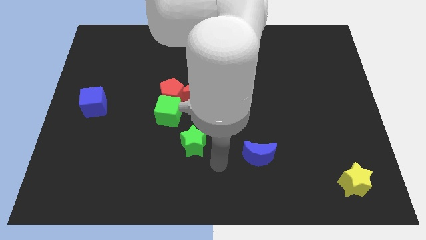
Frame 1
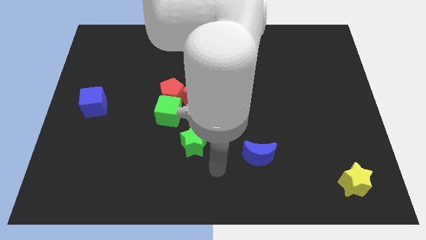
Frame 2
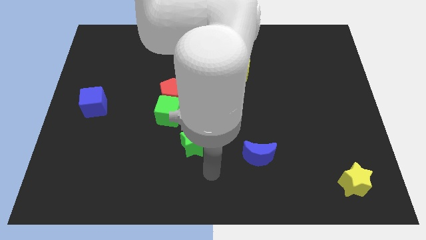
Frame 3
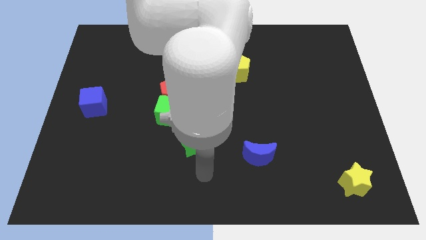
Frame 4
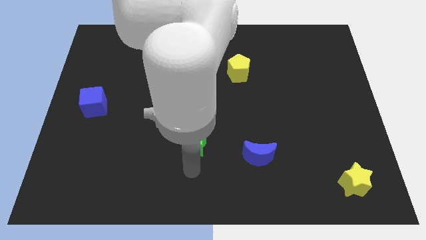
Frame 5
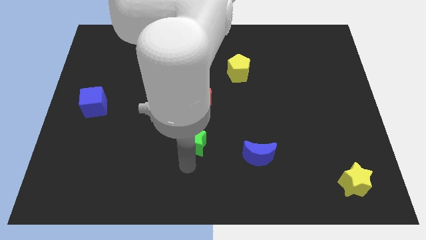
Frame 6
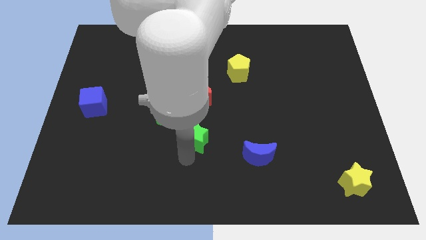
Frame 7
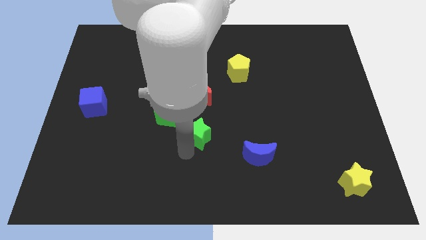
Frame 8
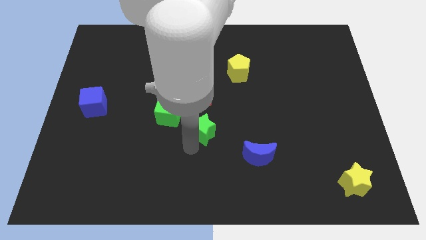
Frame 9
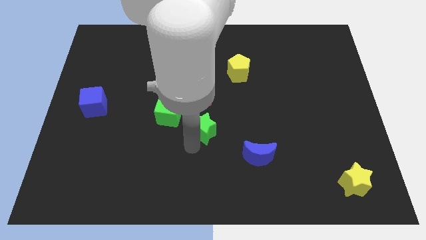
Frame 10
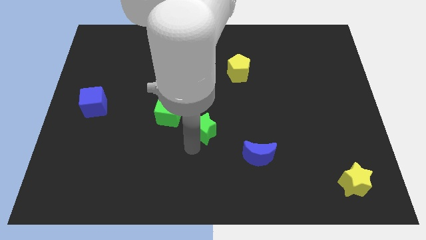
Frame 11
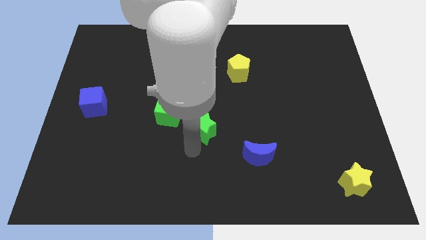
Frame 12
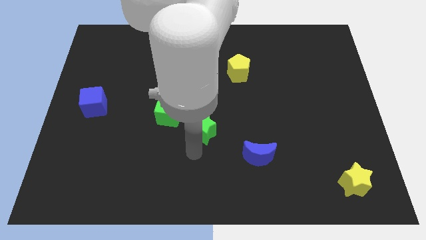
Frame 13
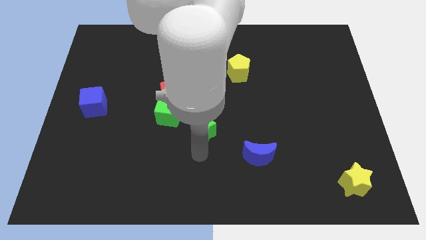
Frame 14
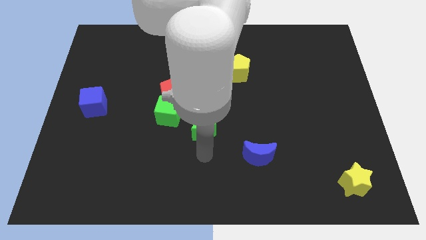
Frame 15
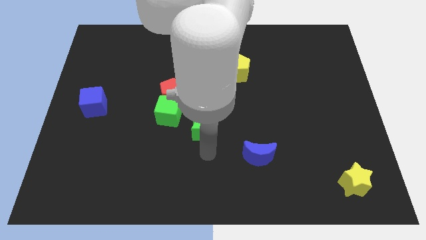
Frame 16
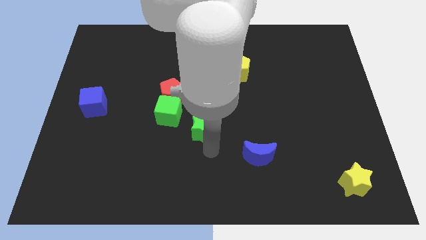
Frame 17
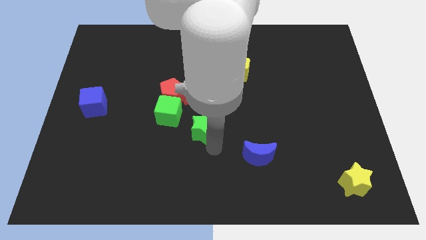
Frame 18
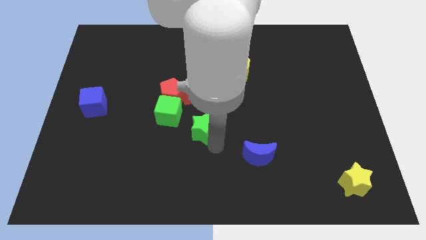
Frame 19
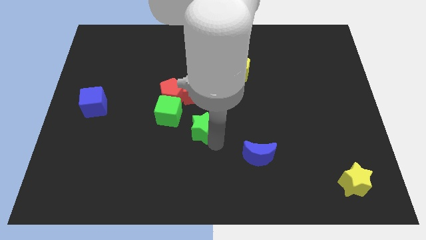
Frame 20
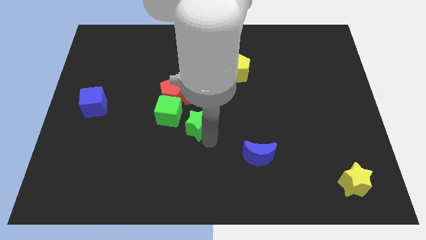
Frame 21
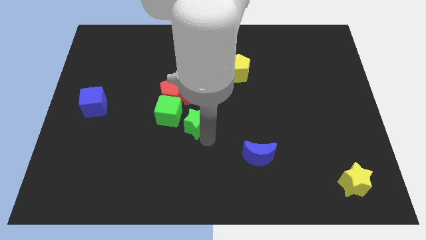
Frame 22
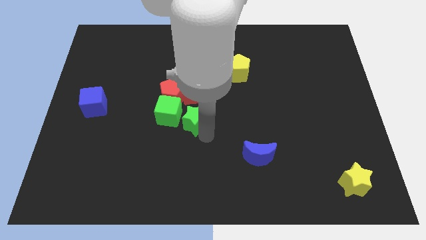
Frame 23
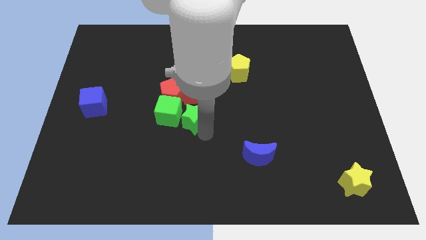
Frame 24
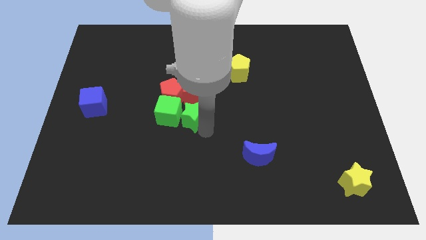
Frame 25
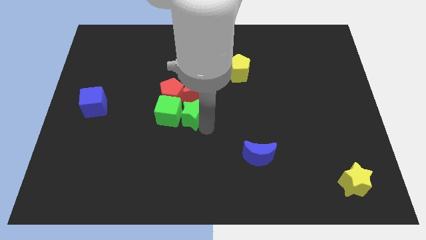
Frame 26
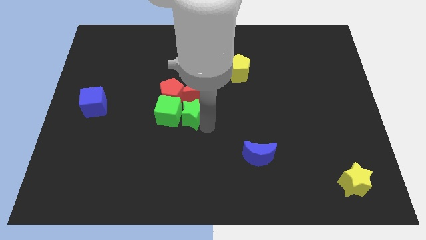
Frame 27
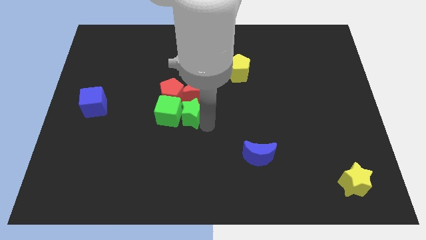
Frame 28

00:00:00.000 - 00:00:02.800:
move the green star to the right side of the green cube

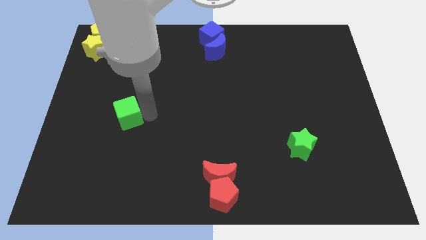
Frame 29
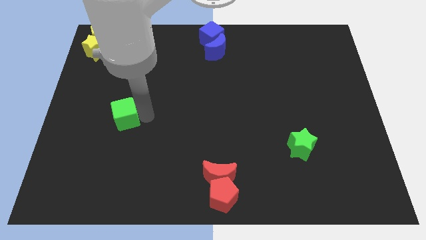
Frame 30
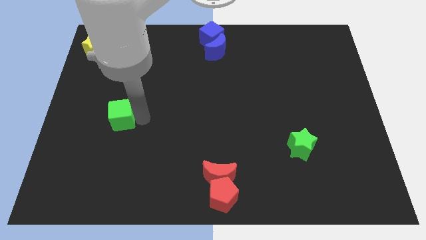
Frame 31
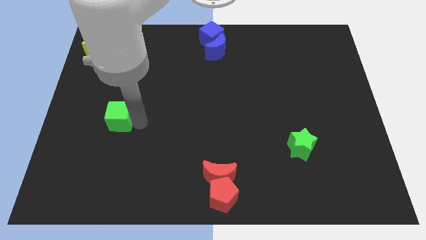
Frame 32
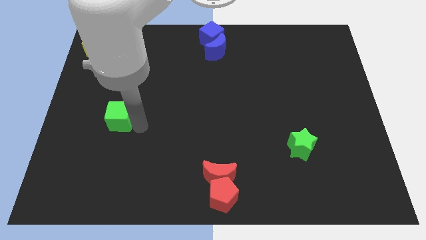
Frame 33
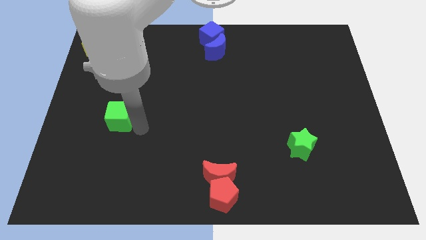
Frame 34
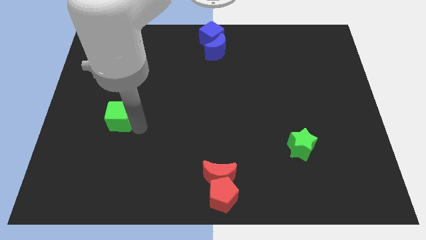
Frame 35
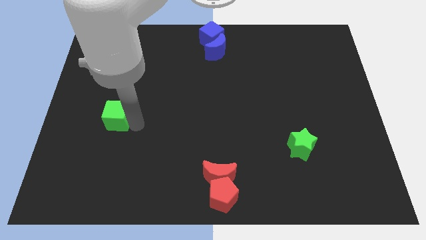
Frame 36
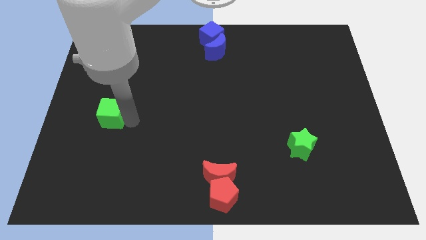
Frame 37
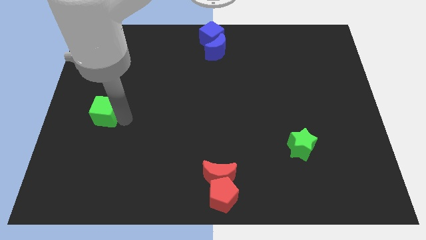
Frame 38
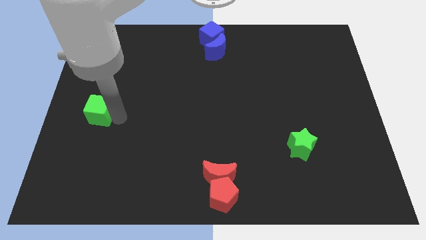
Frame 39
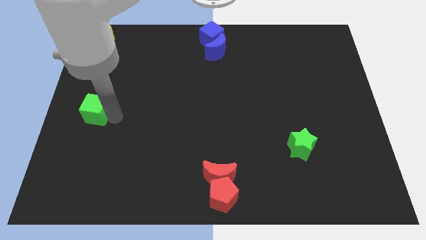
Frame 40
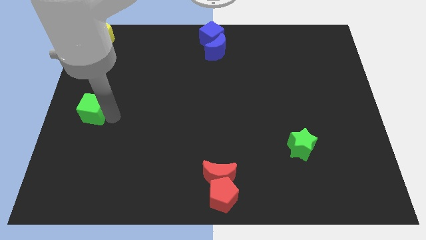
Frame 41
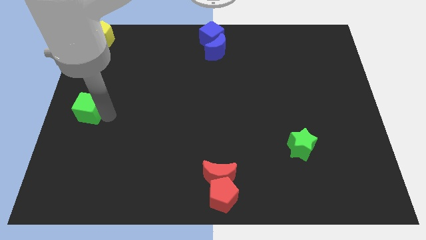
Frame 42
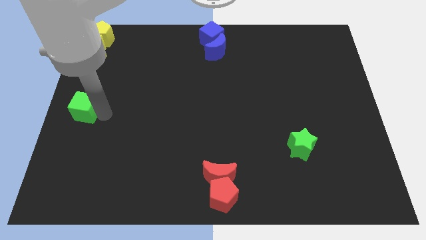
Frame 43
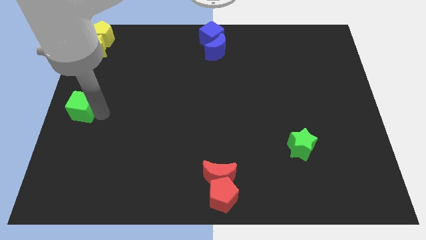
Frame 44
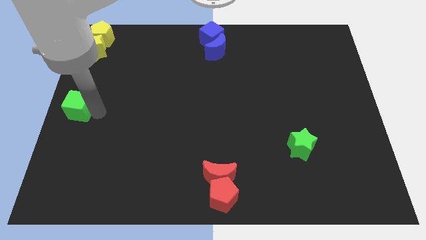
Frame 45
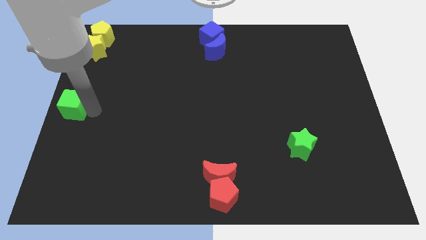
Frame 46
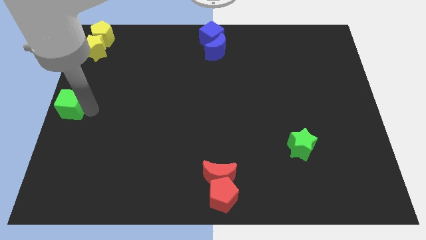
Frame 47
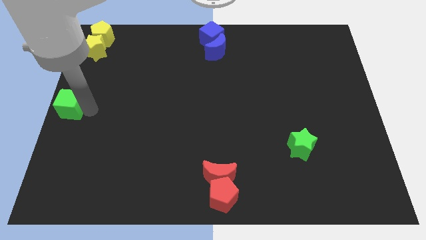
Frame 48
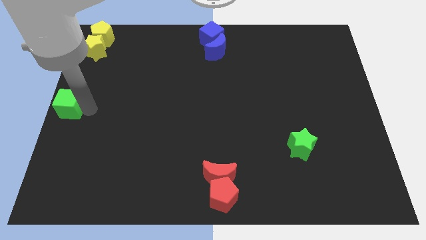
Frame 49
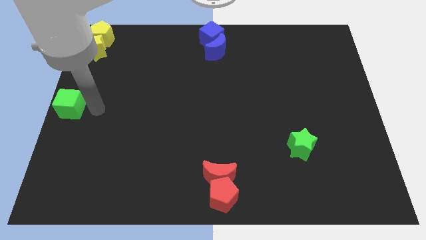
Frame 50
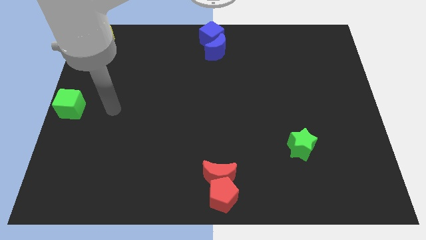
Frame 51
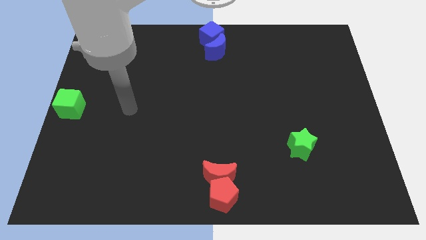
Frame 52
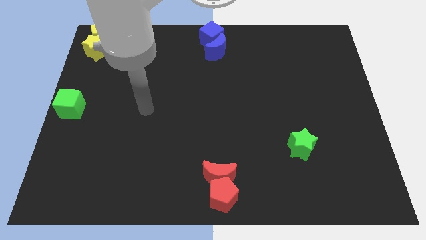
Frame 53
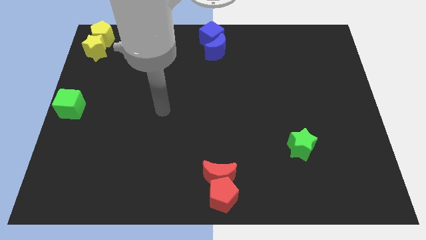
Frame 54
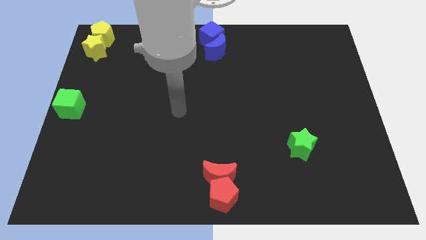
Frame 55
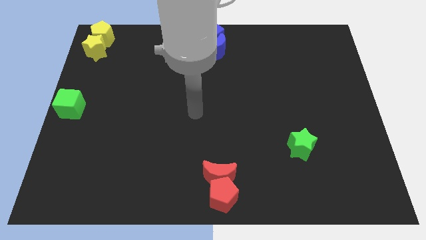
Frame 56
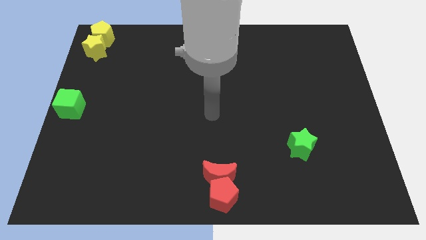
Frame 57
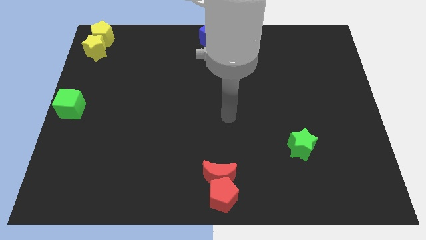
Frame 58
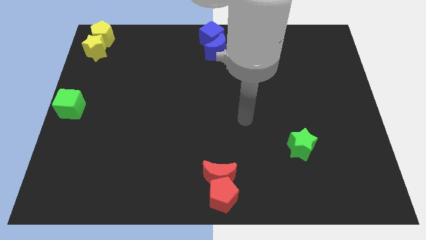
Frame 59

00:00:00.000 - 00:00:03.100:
move the green cube to the left center of the board

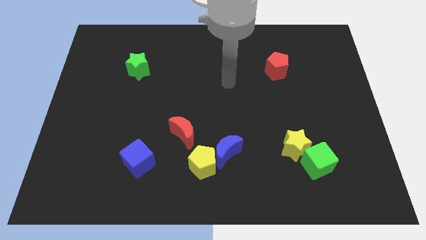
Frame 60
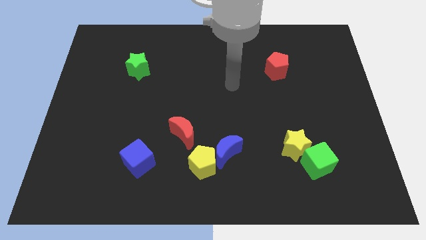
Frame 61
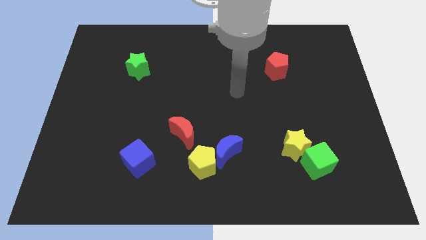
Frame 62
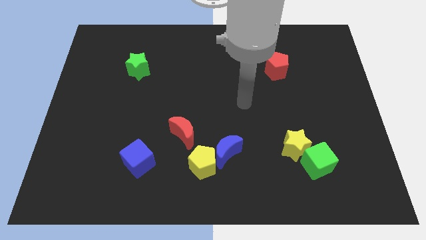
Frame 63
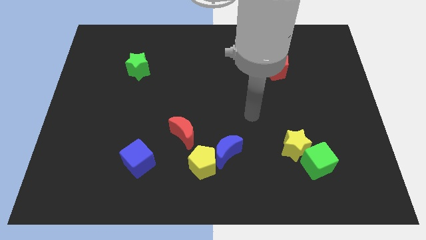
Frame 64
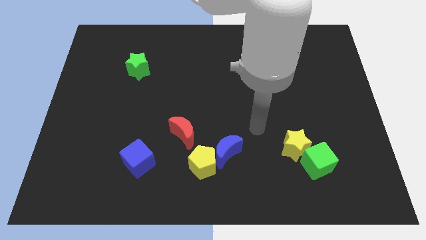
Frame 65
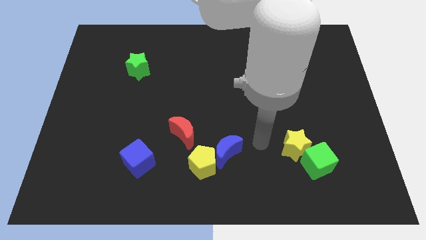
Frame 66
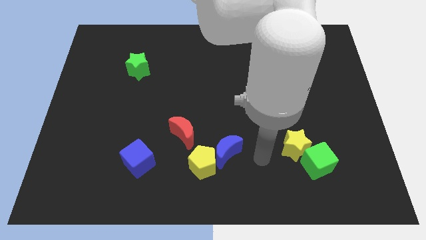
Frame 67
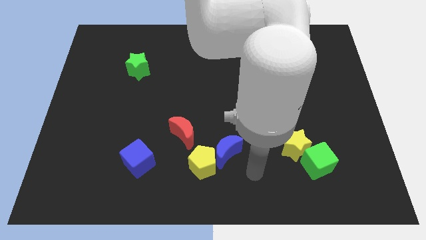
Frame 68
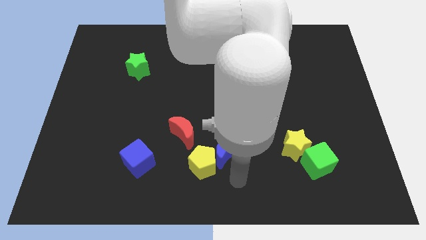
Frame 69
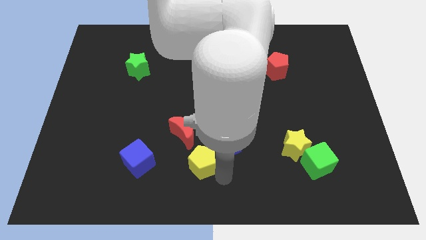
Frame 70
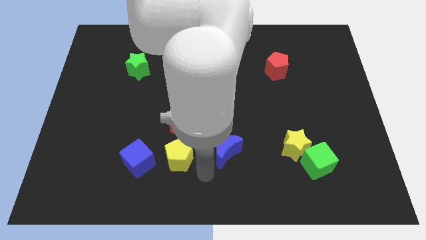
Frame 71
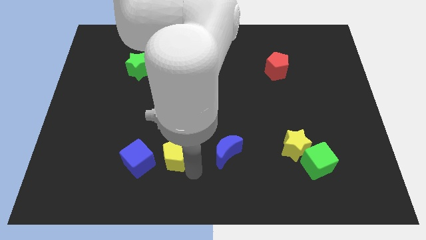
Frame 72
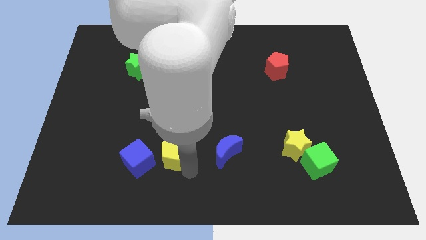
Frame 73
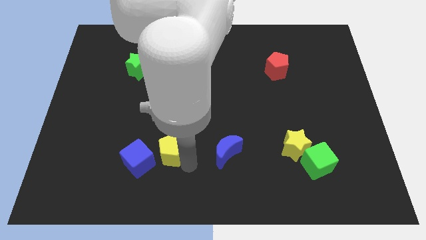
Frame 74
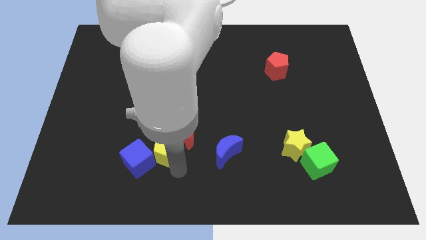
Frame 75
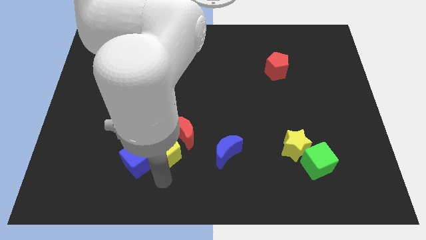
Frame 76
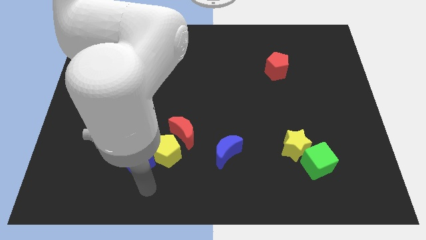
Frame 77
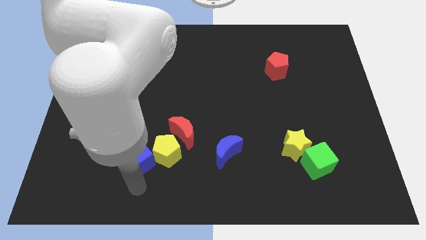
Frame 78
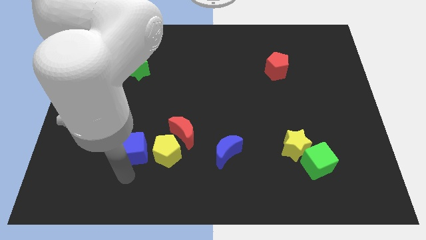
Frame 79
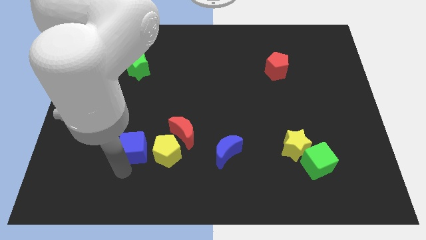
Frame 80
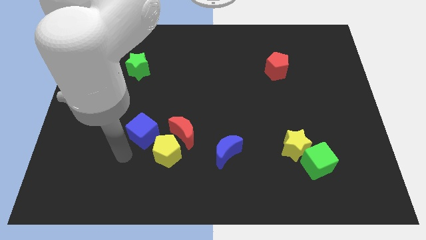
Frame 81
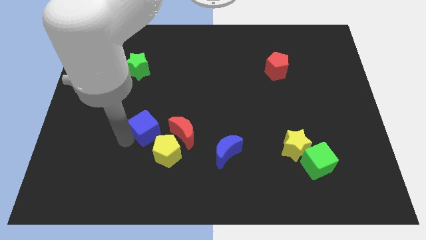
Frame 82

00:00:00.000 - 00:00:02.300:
move the yellow pentagon to the left side of the red moon

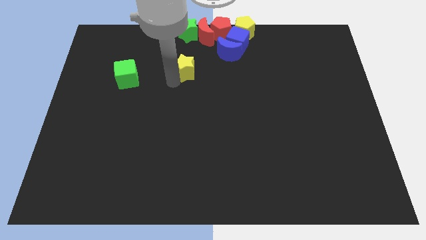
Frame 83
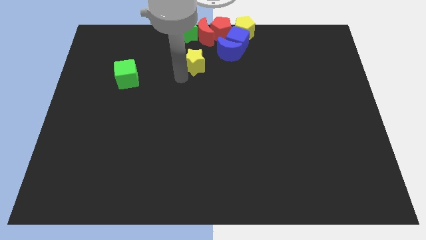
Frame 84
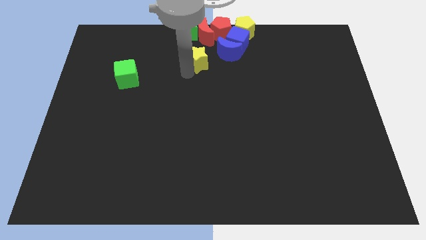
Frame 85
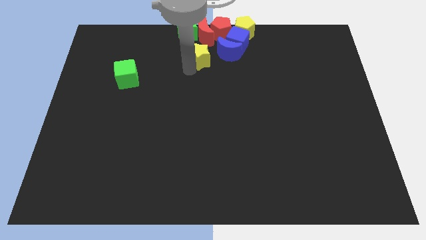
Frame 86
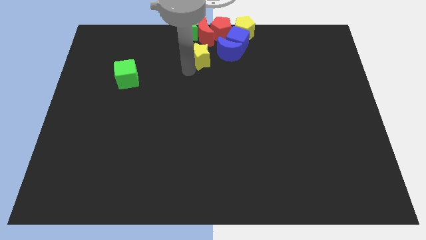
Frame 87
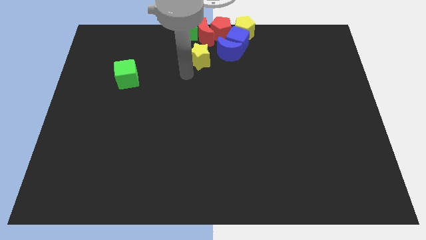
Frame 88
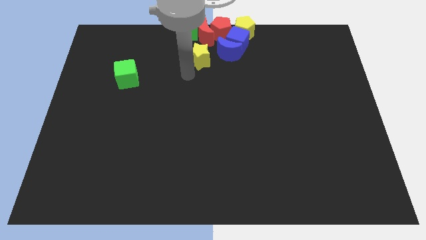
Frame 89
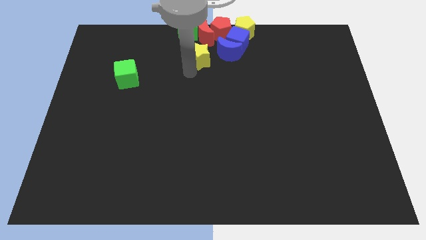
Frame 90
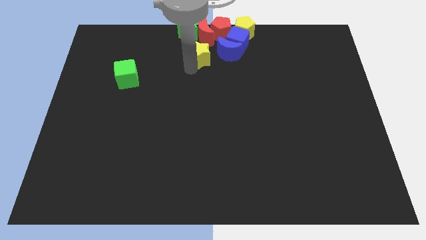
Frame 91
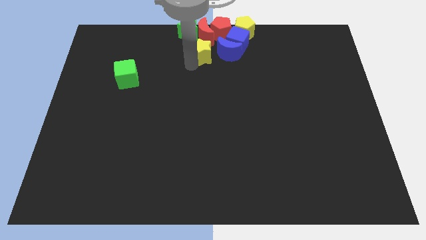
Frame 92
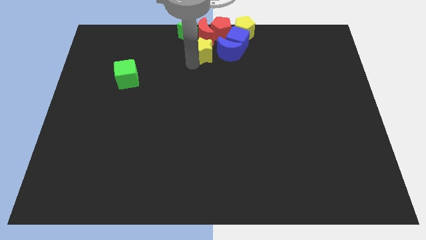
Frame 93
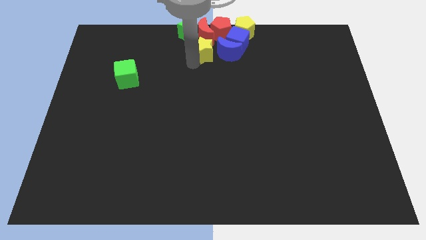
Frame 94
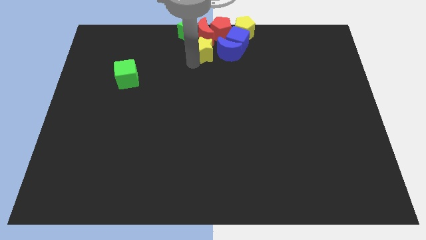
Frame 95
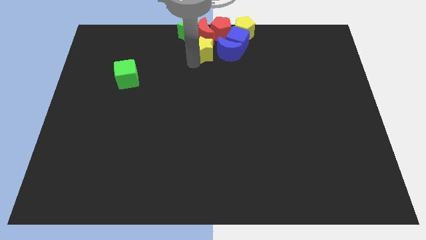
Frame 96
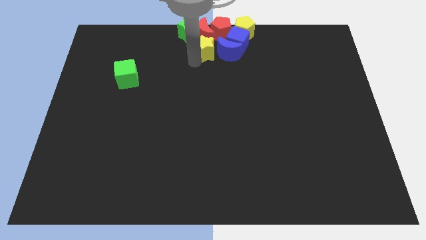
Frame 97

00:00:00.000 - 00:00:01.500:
move the yellow star into the red moon
